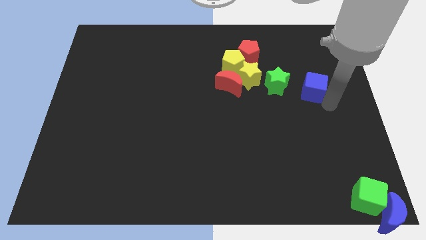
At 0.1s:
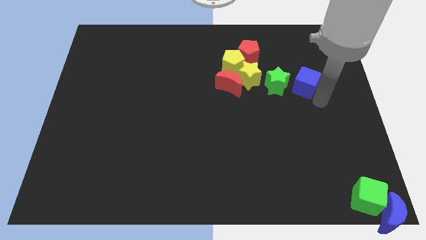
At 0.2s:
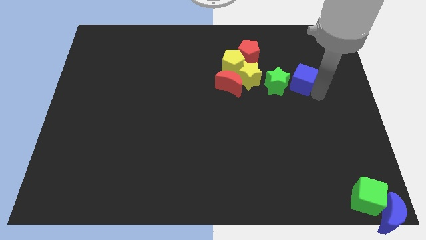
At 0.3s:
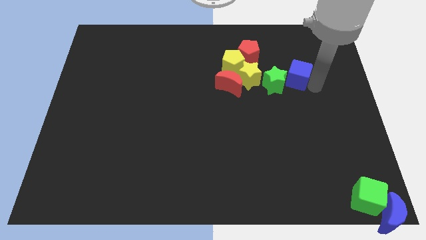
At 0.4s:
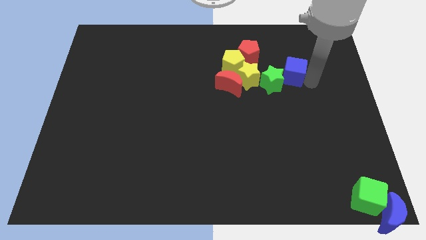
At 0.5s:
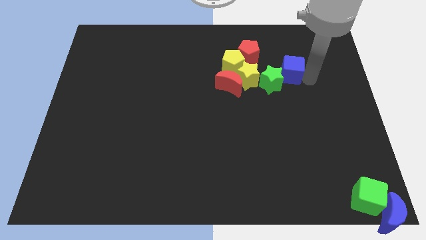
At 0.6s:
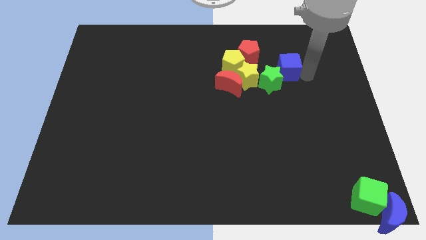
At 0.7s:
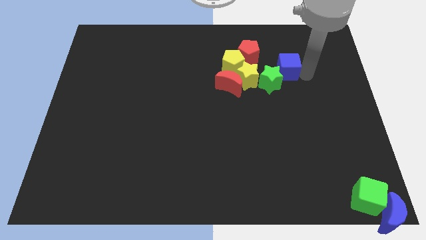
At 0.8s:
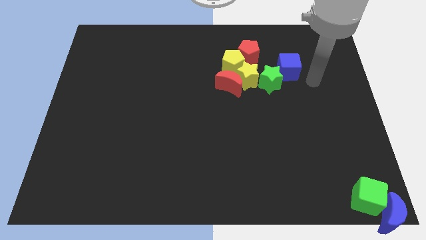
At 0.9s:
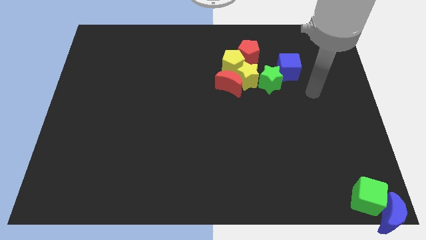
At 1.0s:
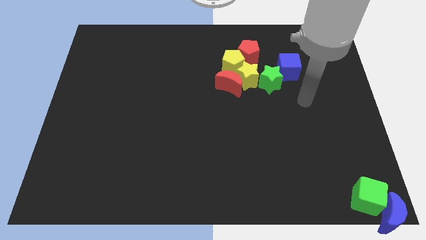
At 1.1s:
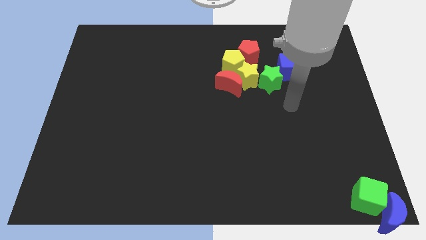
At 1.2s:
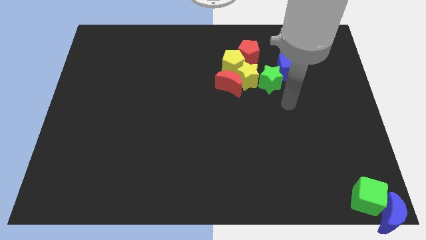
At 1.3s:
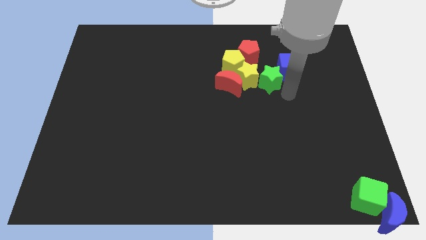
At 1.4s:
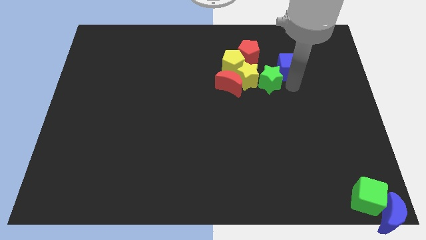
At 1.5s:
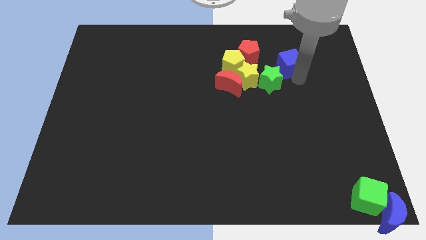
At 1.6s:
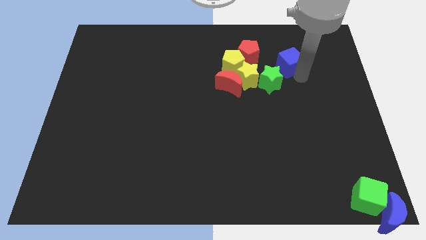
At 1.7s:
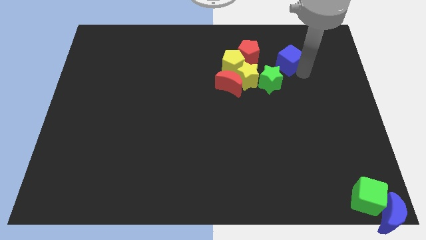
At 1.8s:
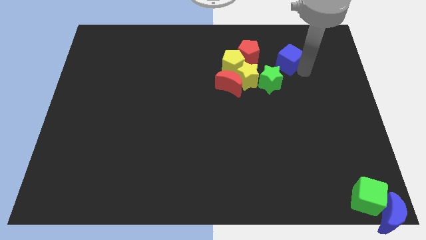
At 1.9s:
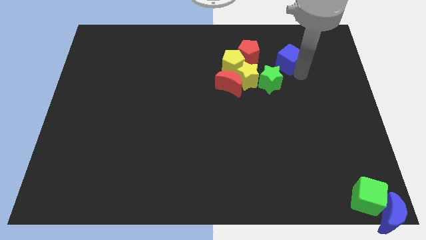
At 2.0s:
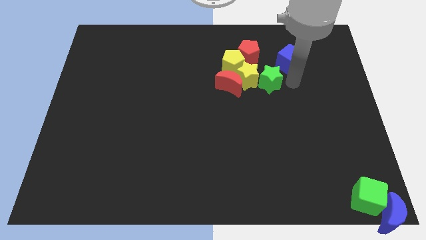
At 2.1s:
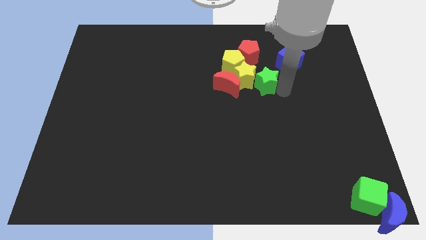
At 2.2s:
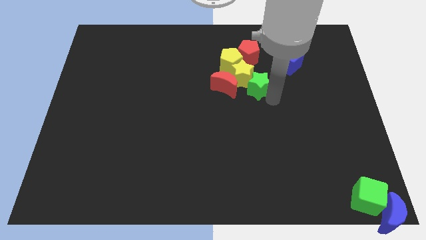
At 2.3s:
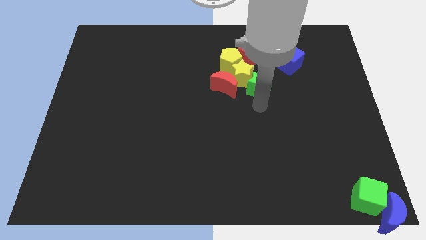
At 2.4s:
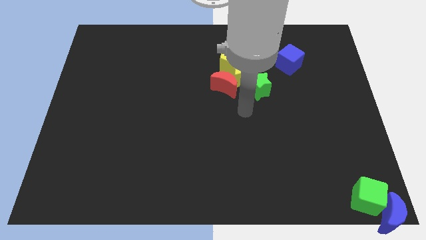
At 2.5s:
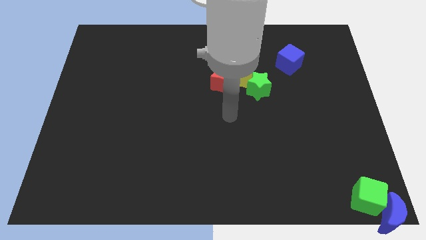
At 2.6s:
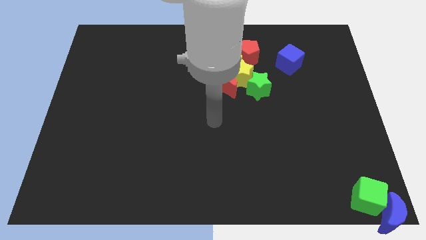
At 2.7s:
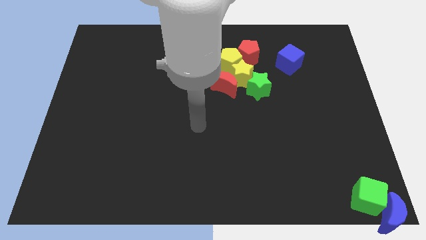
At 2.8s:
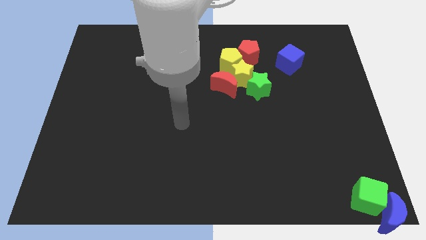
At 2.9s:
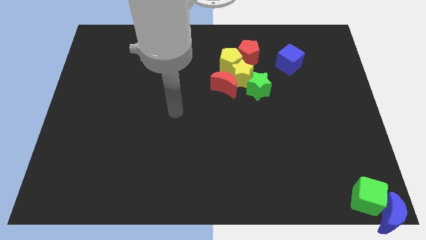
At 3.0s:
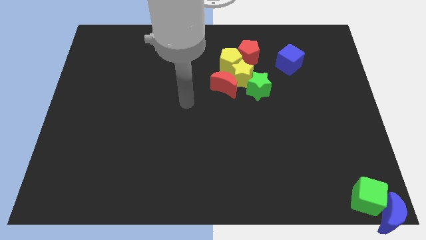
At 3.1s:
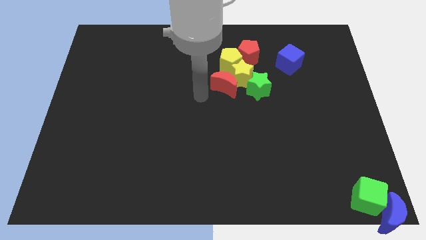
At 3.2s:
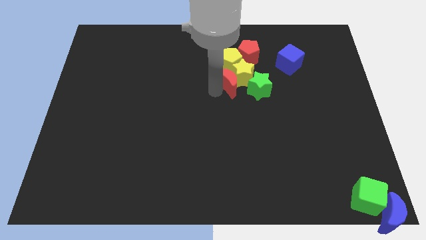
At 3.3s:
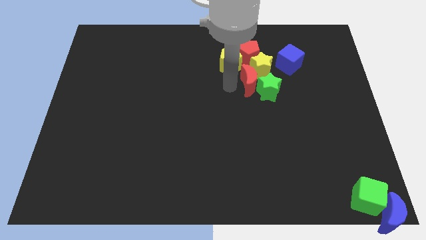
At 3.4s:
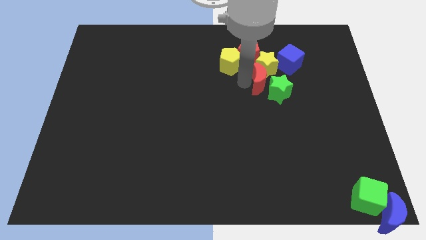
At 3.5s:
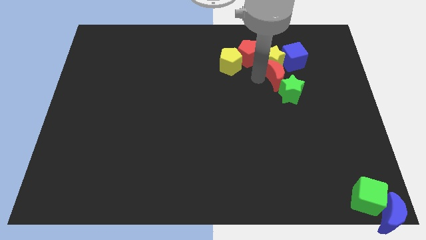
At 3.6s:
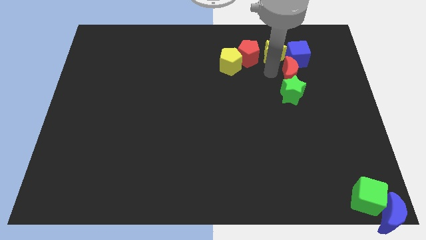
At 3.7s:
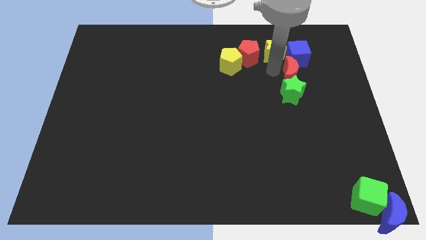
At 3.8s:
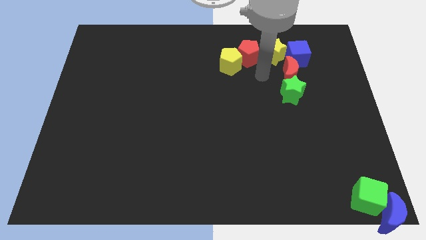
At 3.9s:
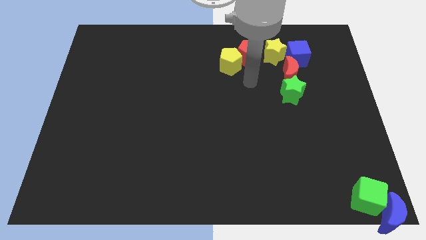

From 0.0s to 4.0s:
push the yellow star and red moon in the blue cube

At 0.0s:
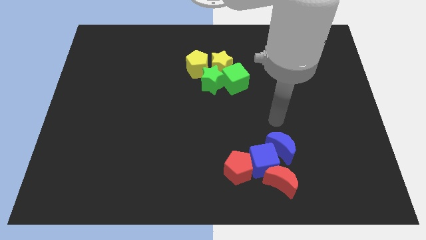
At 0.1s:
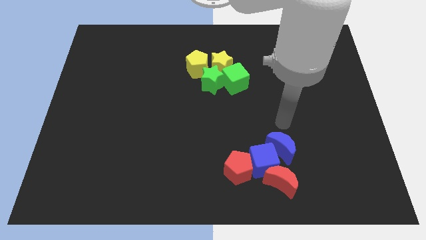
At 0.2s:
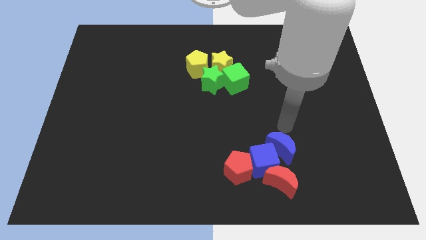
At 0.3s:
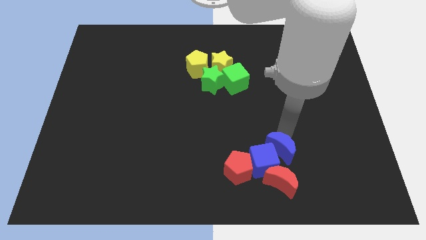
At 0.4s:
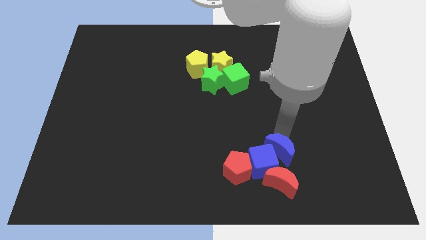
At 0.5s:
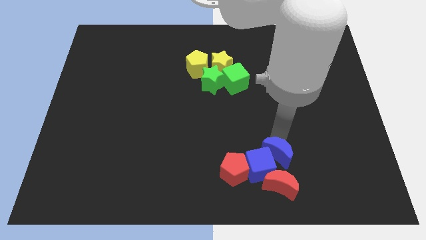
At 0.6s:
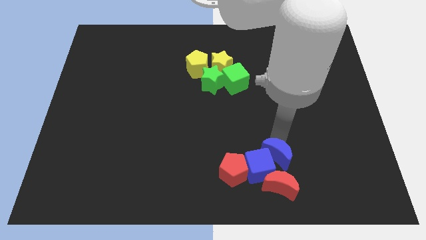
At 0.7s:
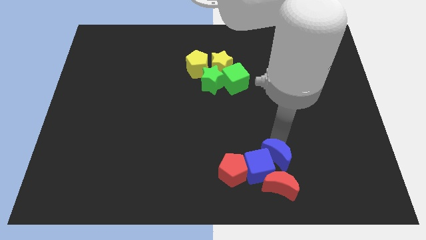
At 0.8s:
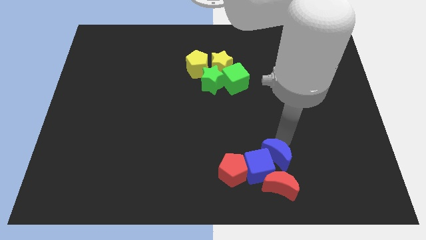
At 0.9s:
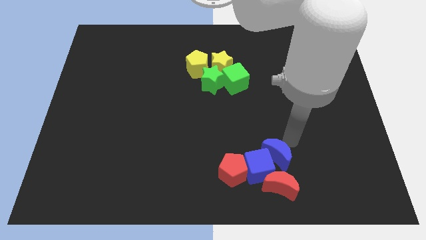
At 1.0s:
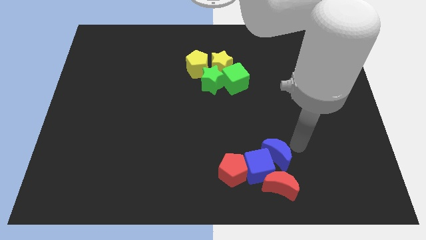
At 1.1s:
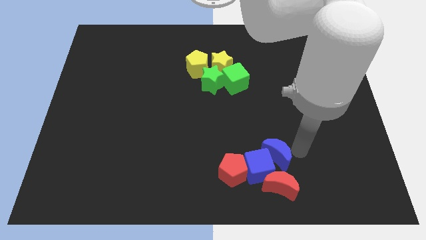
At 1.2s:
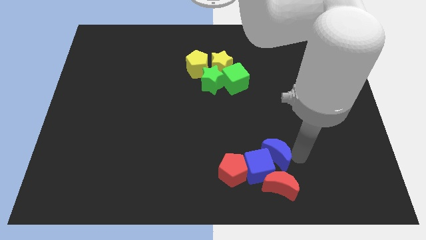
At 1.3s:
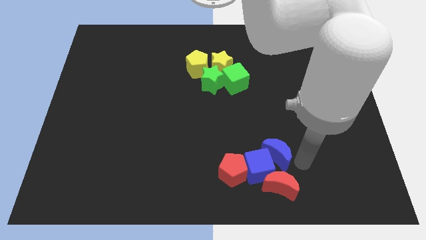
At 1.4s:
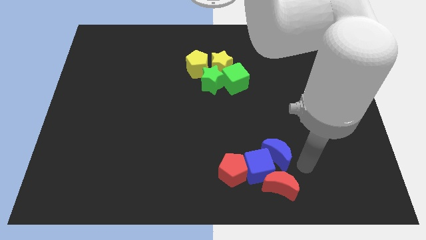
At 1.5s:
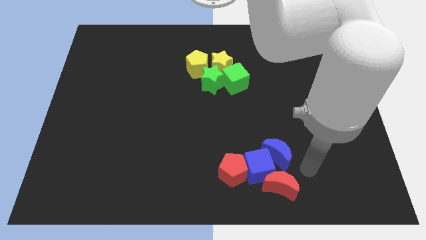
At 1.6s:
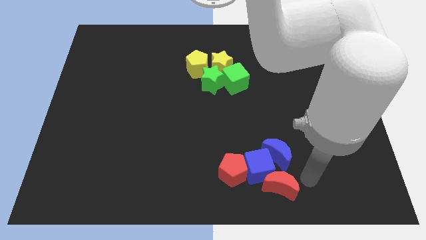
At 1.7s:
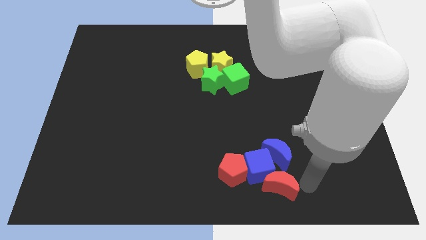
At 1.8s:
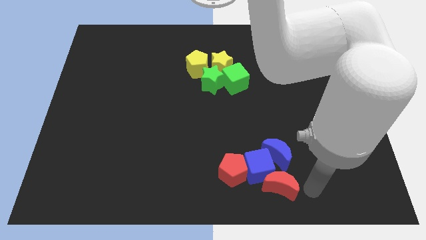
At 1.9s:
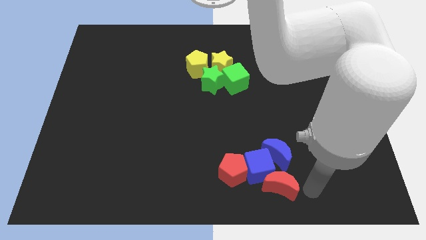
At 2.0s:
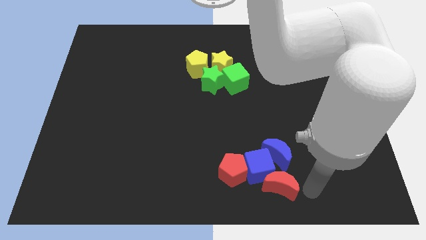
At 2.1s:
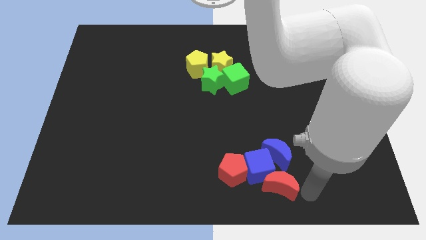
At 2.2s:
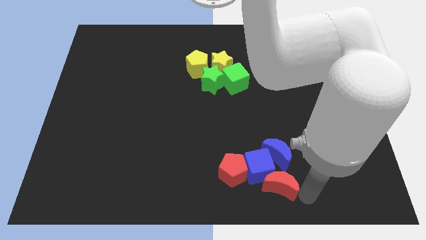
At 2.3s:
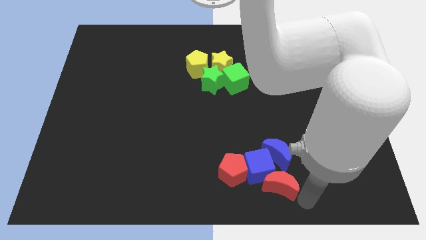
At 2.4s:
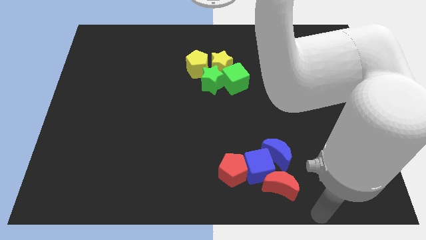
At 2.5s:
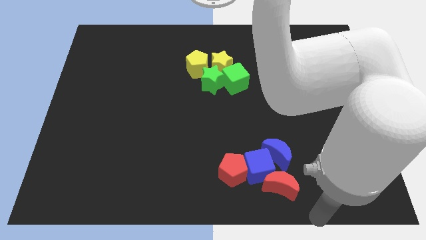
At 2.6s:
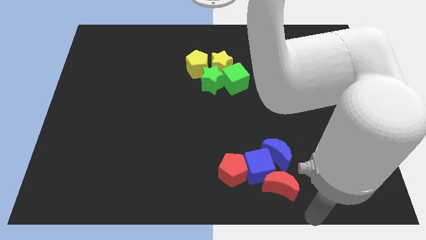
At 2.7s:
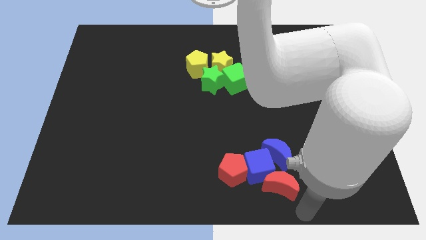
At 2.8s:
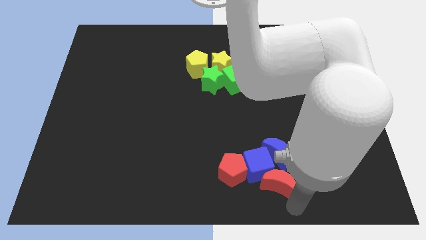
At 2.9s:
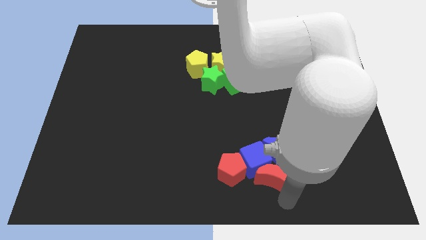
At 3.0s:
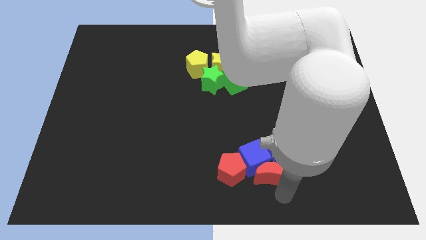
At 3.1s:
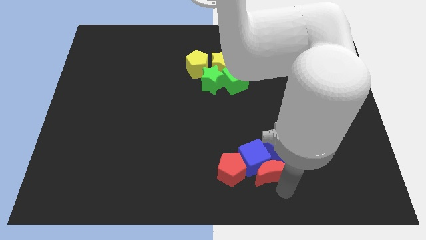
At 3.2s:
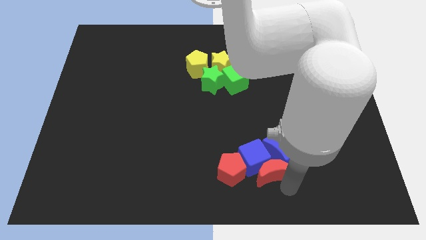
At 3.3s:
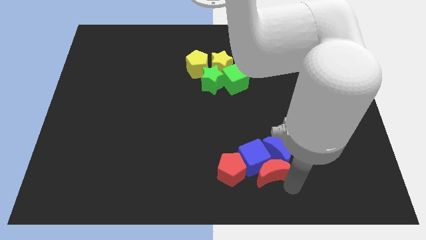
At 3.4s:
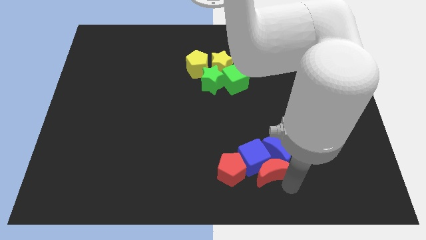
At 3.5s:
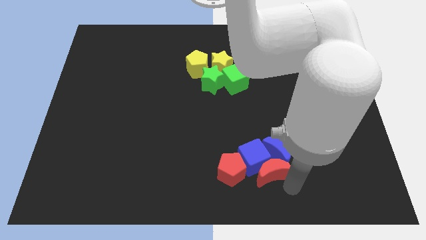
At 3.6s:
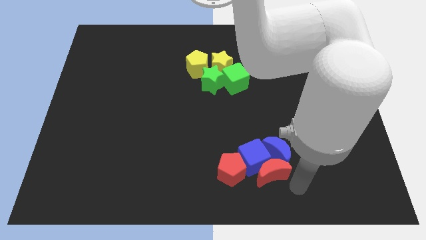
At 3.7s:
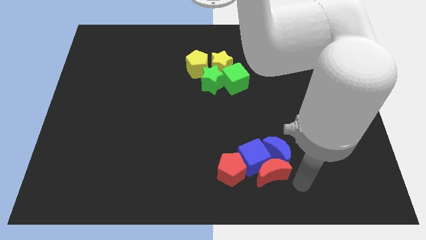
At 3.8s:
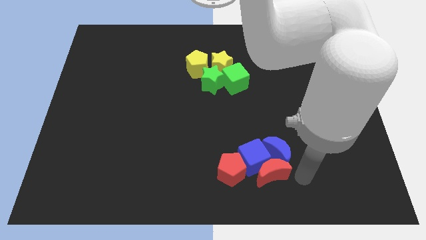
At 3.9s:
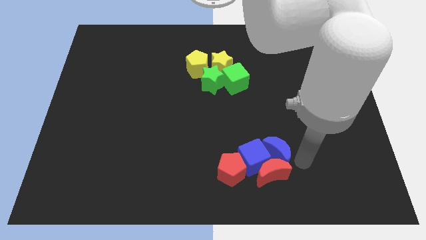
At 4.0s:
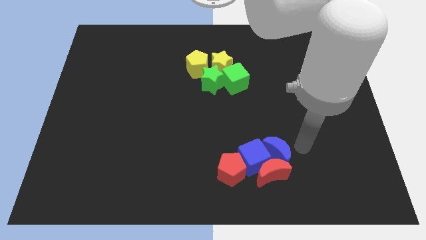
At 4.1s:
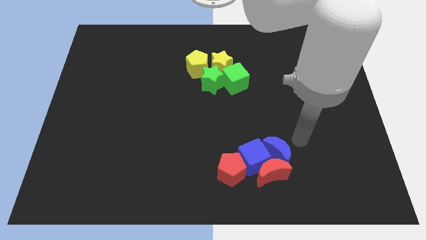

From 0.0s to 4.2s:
slightly push the group of blocks upwards of the board

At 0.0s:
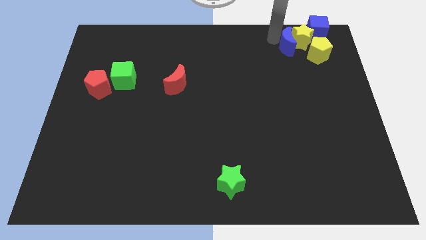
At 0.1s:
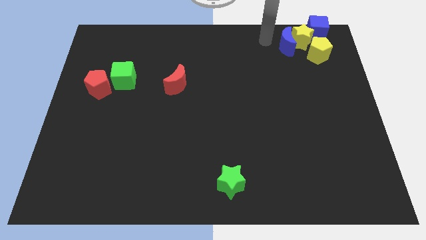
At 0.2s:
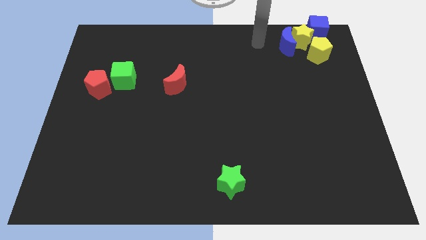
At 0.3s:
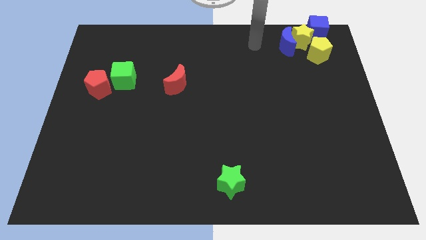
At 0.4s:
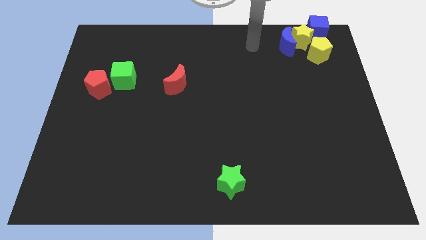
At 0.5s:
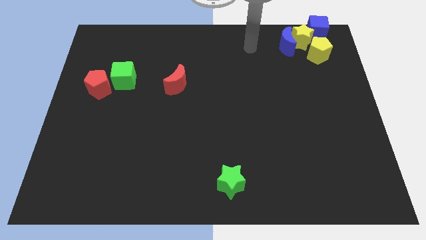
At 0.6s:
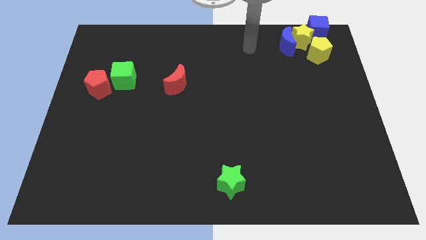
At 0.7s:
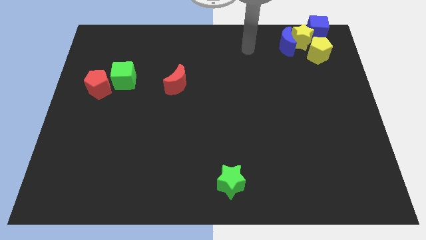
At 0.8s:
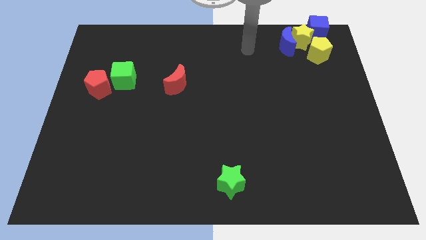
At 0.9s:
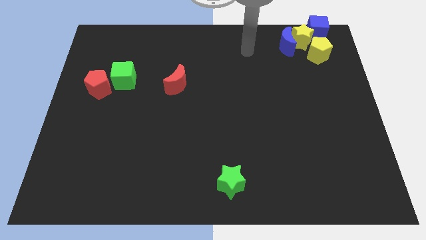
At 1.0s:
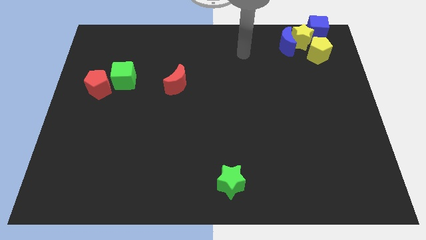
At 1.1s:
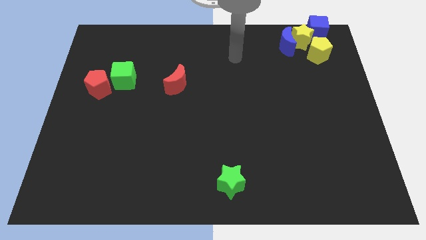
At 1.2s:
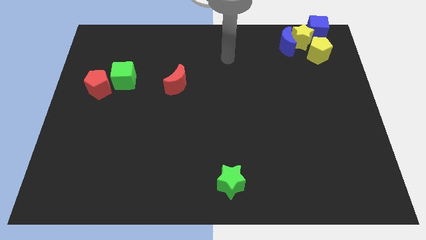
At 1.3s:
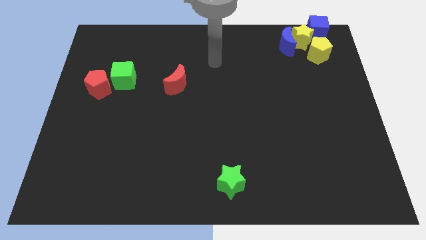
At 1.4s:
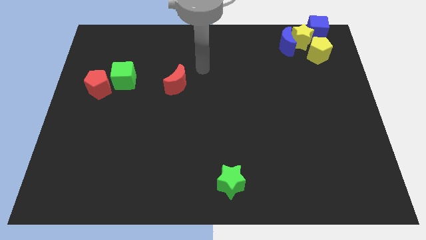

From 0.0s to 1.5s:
point the arm to the top right of the red moon
